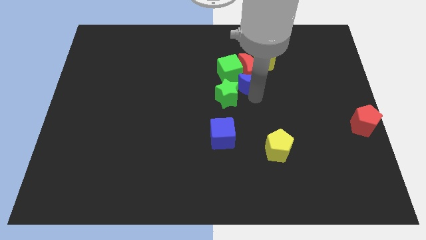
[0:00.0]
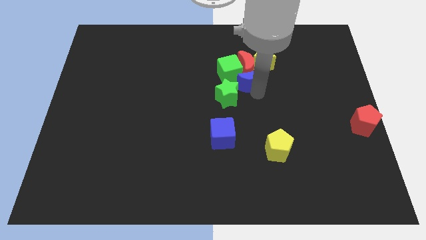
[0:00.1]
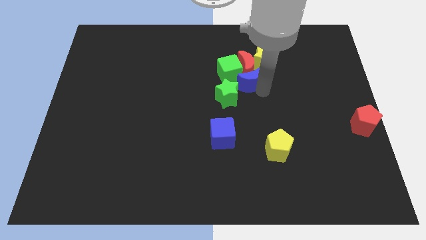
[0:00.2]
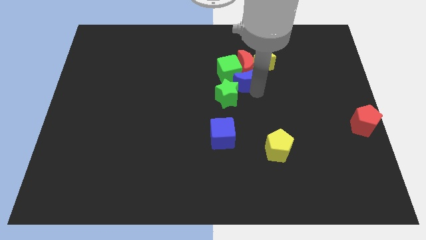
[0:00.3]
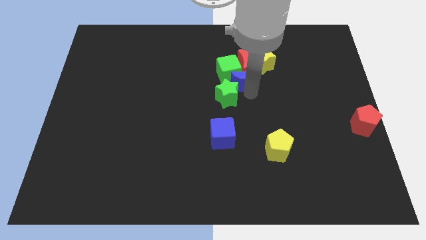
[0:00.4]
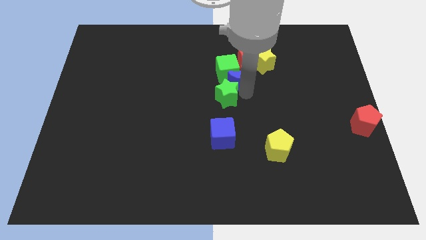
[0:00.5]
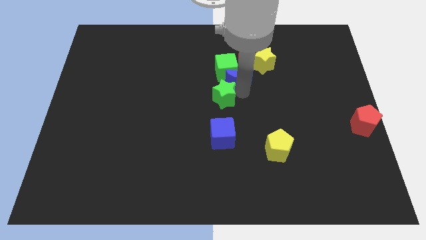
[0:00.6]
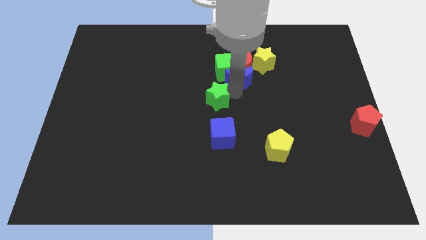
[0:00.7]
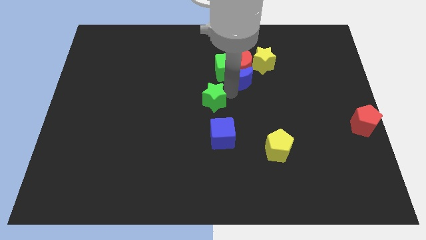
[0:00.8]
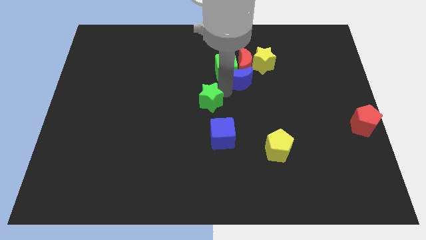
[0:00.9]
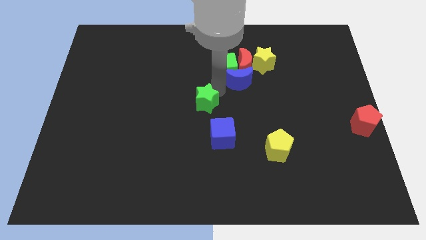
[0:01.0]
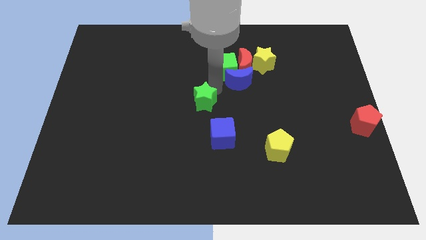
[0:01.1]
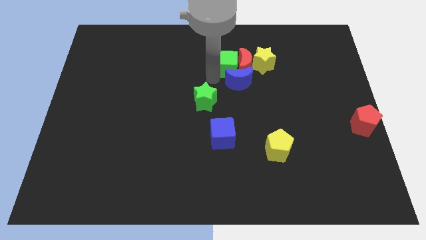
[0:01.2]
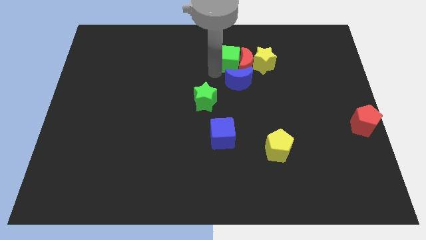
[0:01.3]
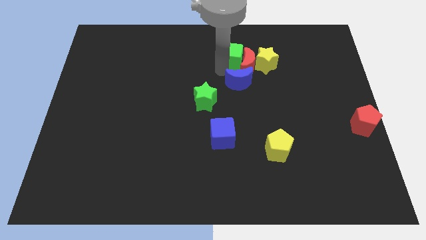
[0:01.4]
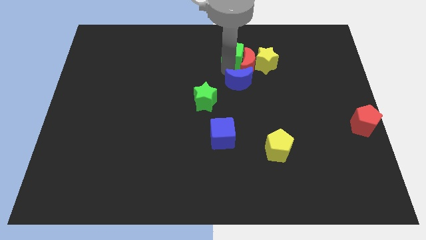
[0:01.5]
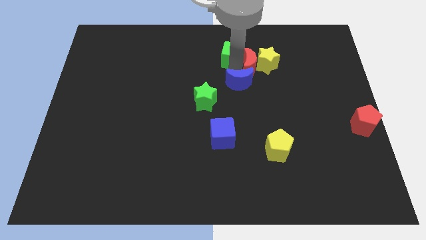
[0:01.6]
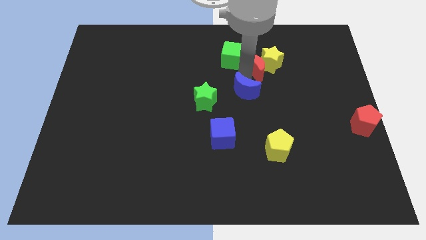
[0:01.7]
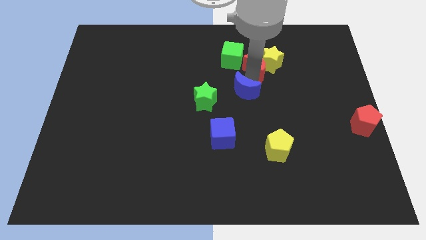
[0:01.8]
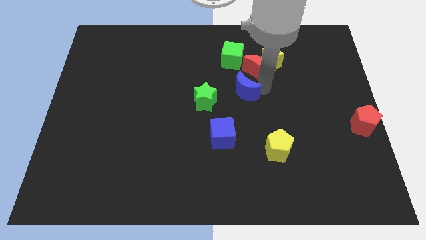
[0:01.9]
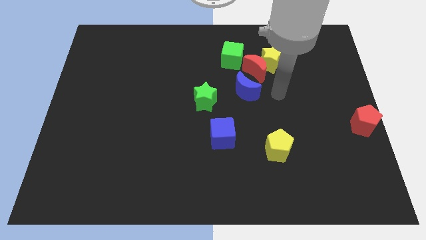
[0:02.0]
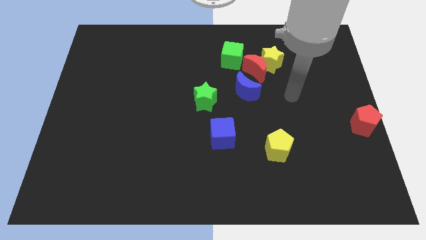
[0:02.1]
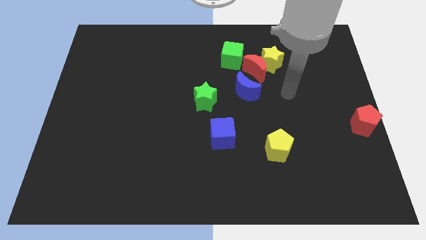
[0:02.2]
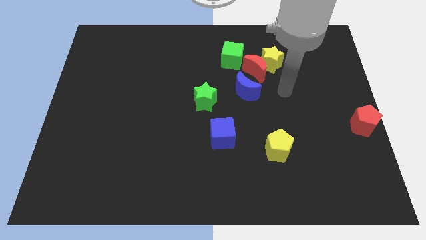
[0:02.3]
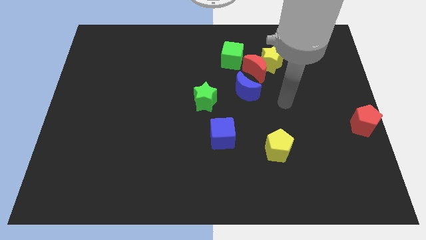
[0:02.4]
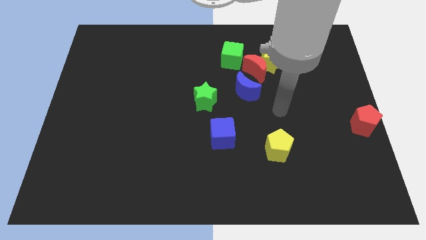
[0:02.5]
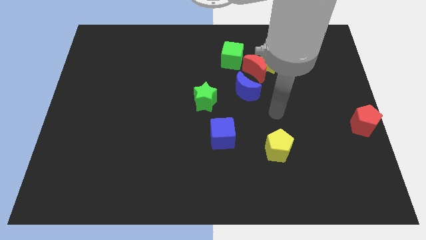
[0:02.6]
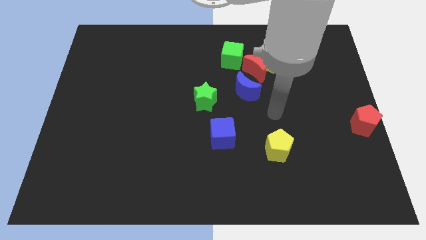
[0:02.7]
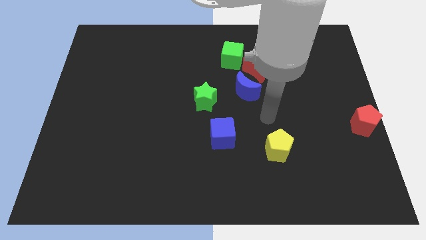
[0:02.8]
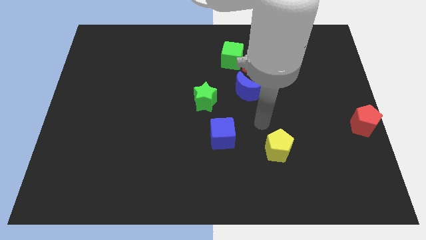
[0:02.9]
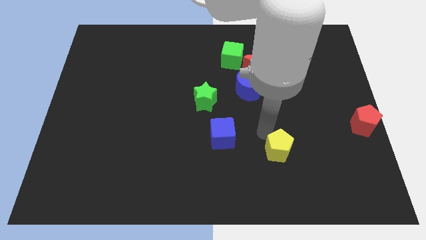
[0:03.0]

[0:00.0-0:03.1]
separate the green cube and the green star

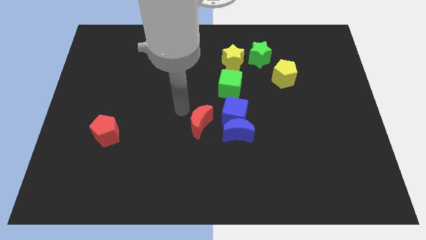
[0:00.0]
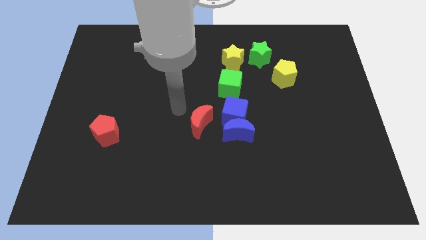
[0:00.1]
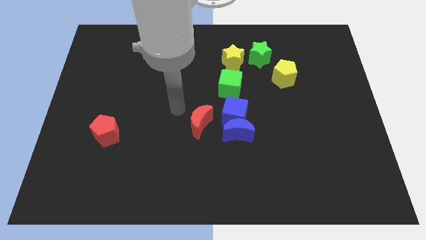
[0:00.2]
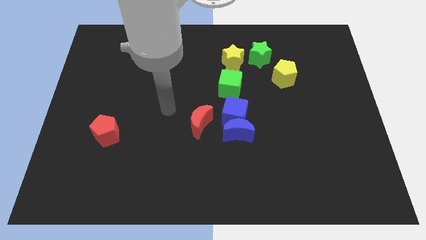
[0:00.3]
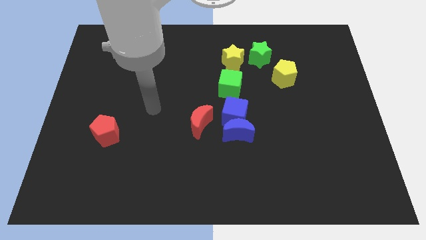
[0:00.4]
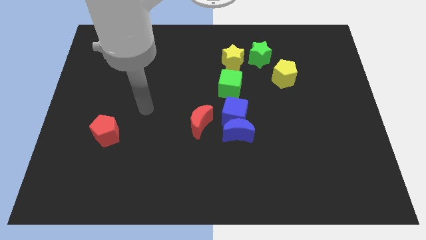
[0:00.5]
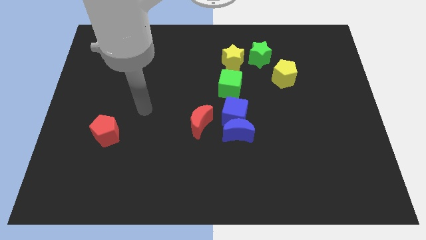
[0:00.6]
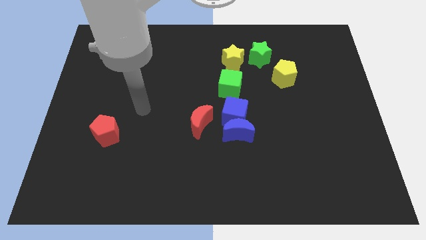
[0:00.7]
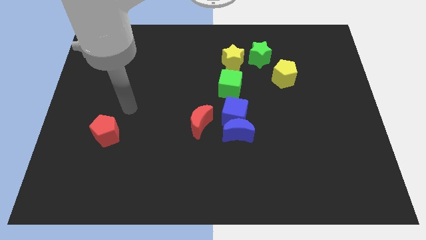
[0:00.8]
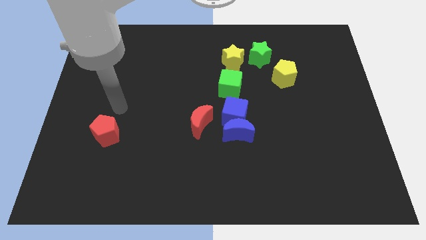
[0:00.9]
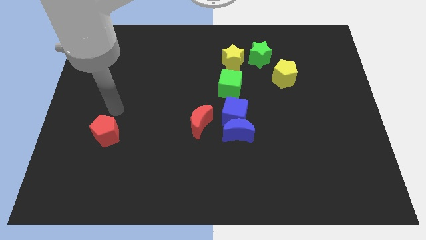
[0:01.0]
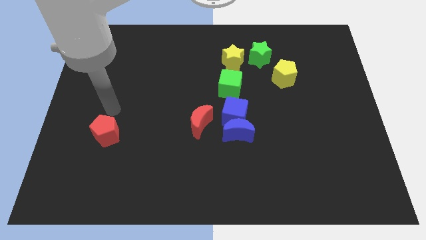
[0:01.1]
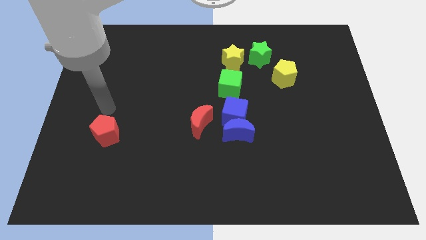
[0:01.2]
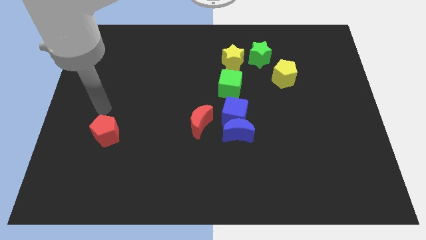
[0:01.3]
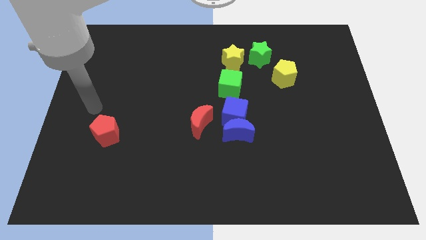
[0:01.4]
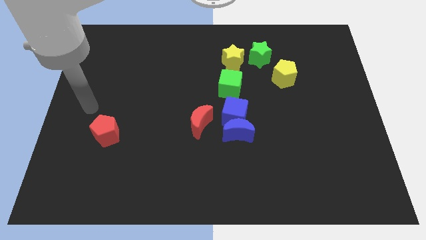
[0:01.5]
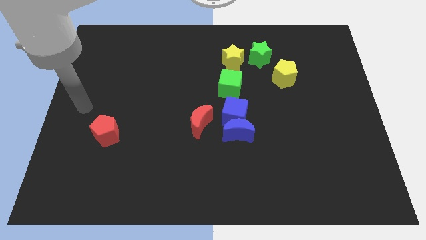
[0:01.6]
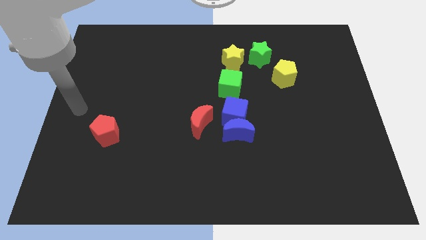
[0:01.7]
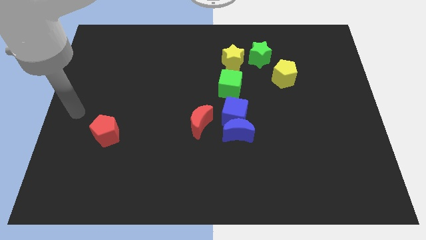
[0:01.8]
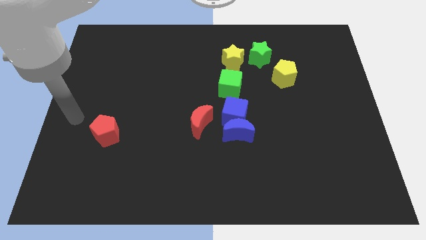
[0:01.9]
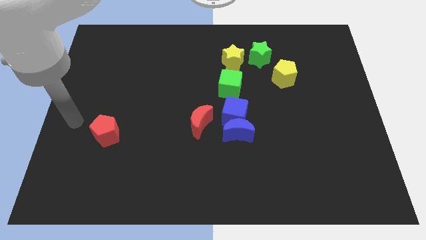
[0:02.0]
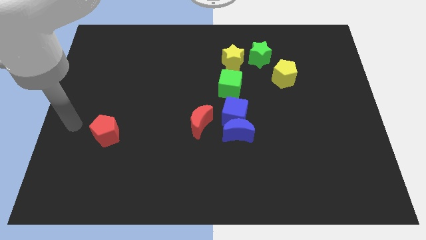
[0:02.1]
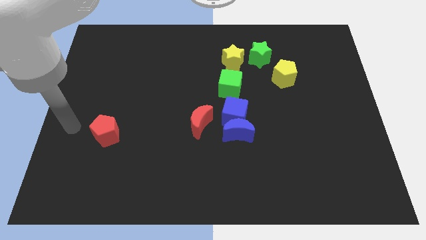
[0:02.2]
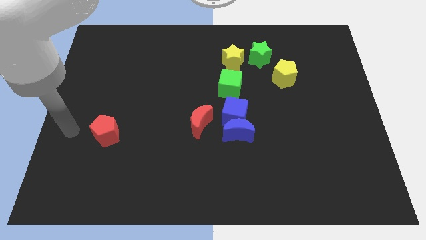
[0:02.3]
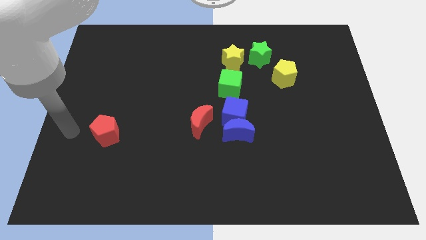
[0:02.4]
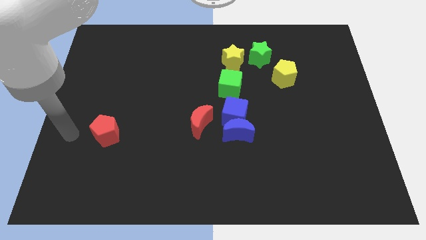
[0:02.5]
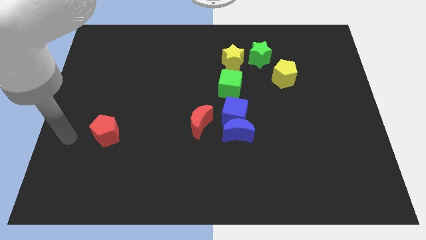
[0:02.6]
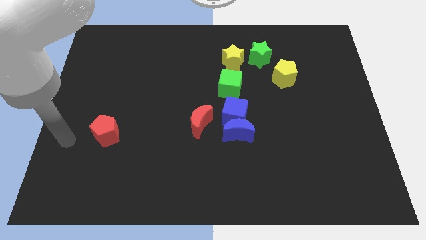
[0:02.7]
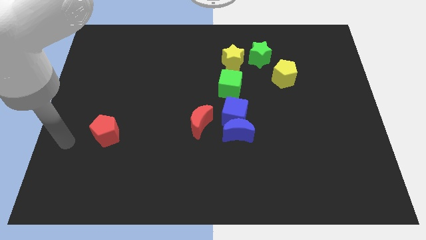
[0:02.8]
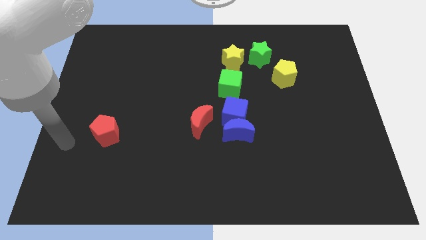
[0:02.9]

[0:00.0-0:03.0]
point your arm at the left of the red pentagon

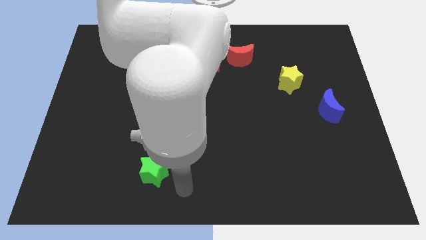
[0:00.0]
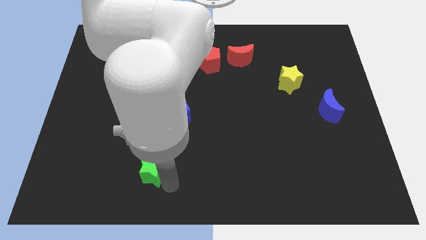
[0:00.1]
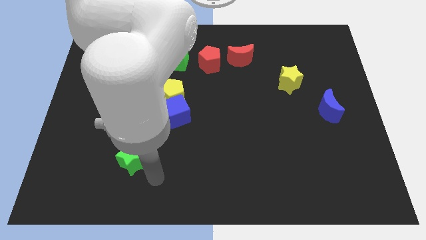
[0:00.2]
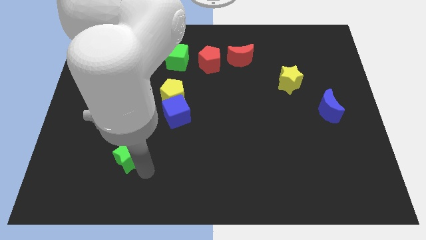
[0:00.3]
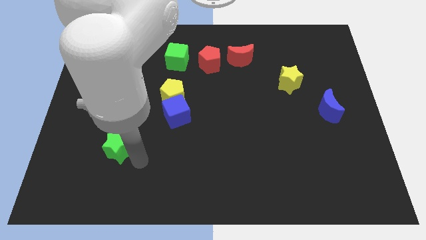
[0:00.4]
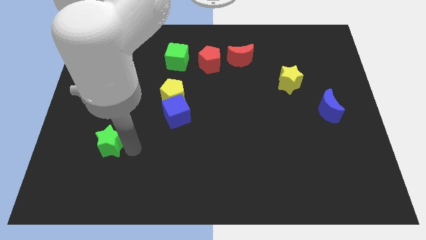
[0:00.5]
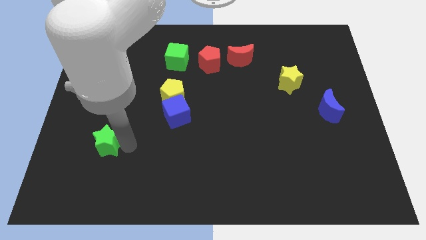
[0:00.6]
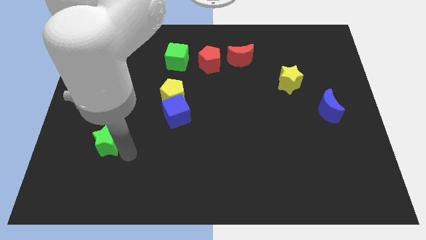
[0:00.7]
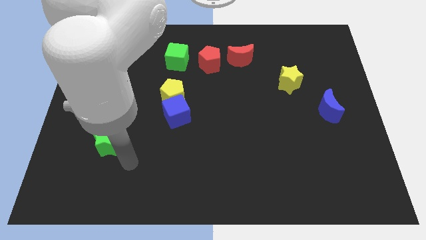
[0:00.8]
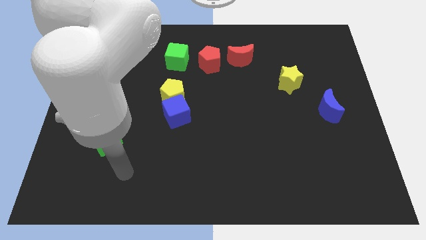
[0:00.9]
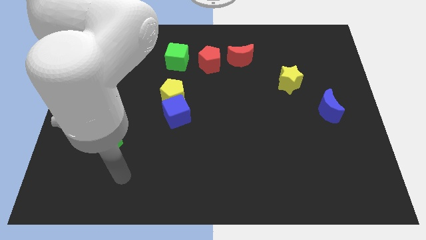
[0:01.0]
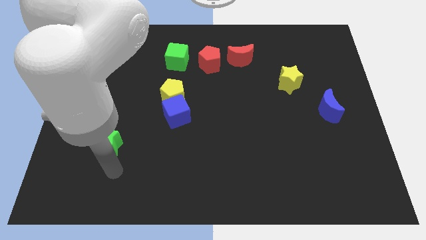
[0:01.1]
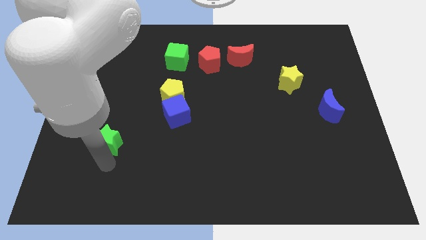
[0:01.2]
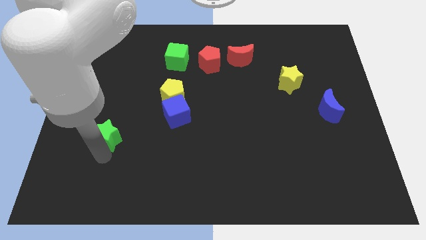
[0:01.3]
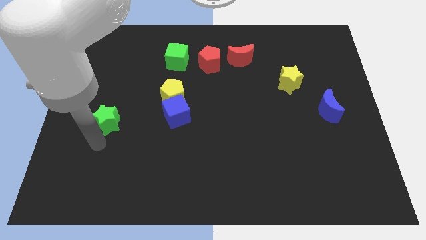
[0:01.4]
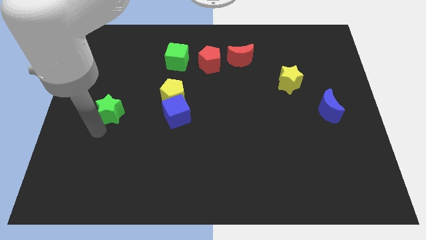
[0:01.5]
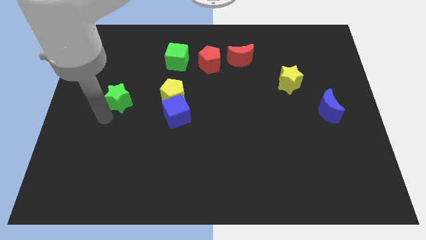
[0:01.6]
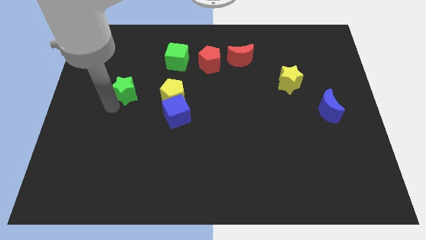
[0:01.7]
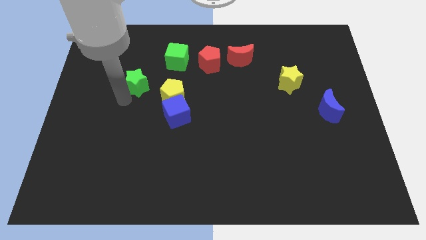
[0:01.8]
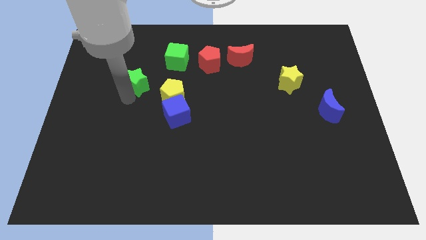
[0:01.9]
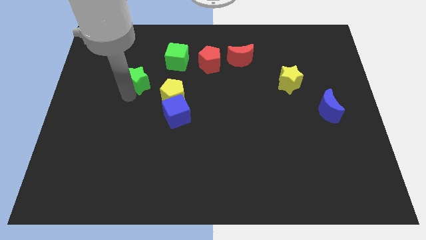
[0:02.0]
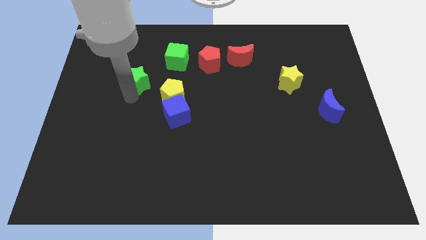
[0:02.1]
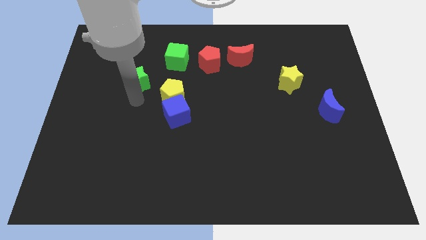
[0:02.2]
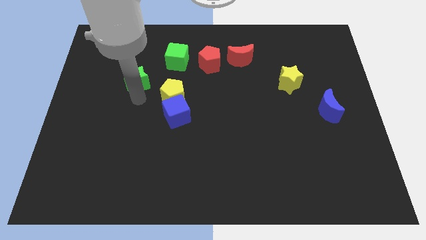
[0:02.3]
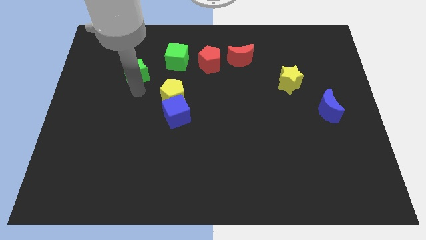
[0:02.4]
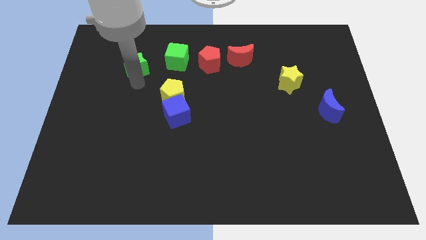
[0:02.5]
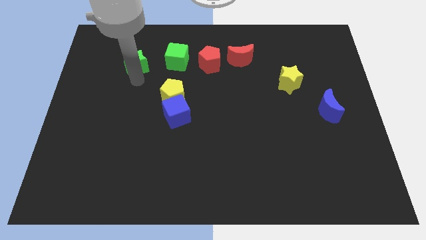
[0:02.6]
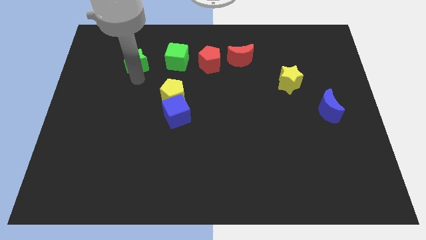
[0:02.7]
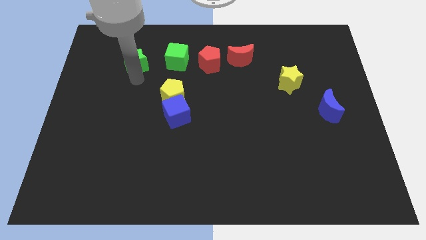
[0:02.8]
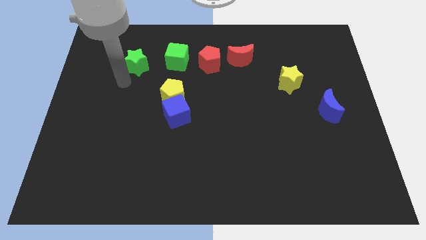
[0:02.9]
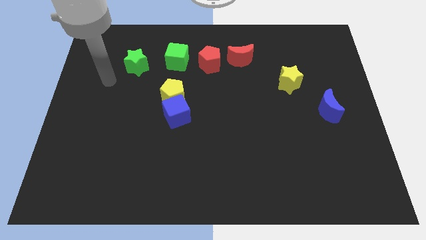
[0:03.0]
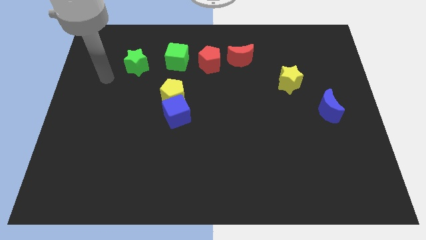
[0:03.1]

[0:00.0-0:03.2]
place the green star to the left of the green cube
